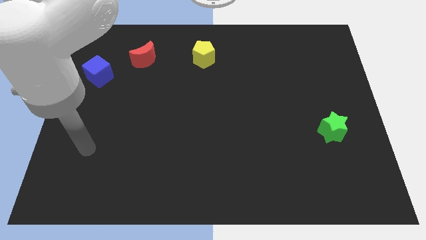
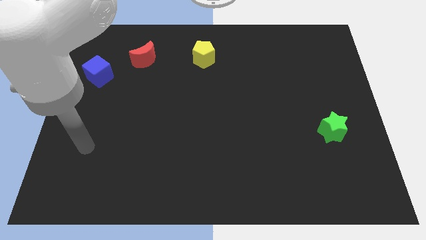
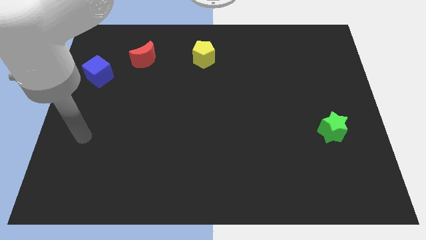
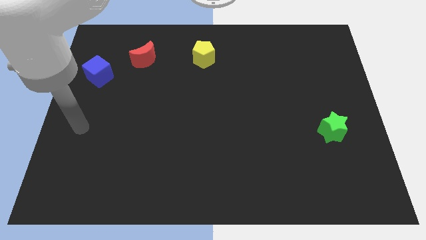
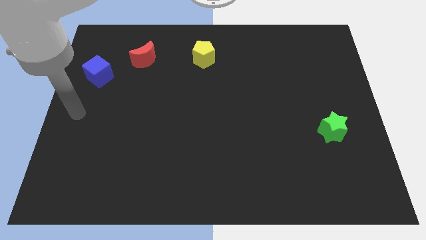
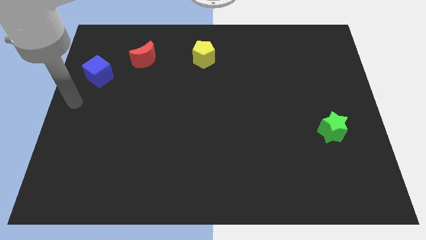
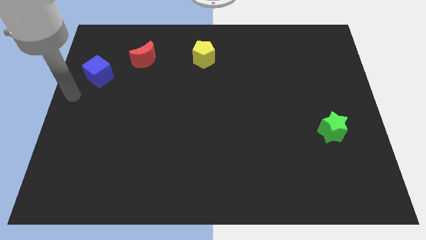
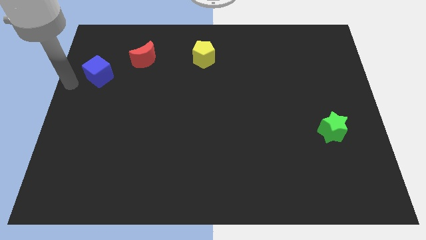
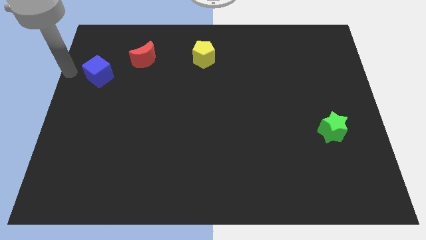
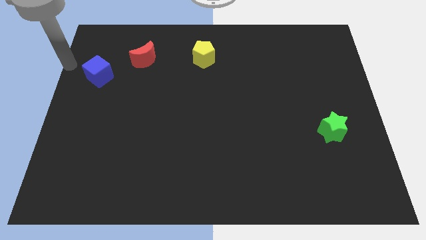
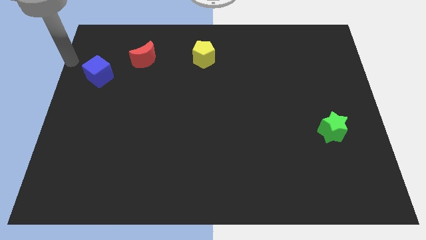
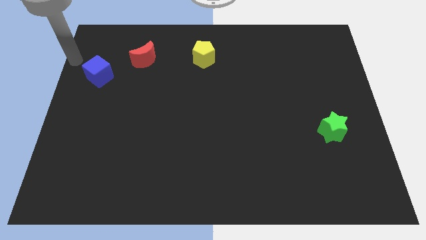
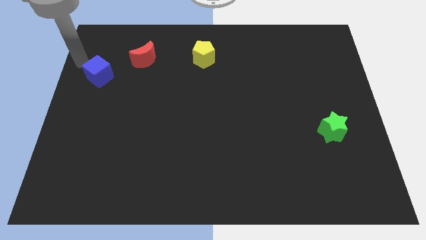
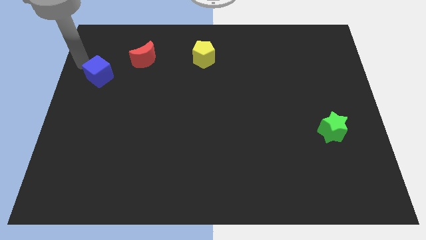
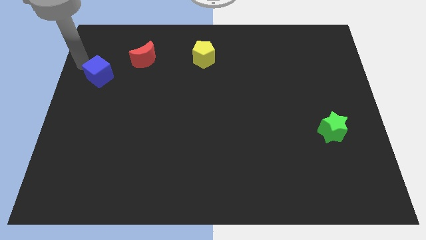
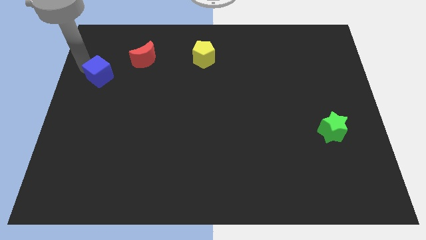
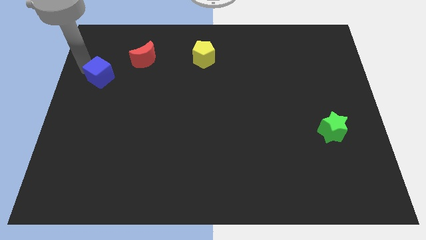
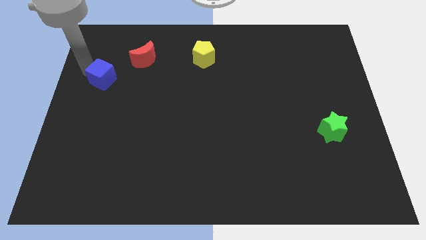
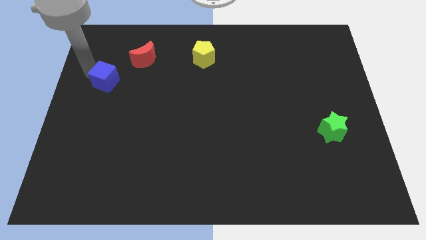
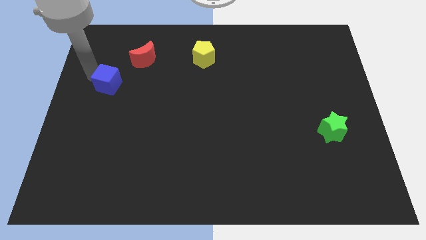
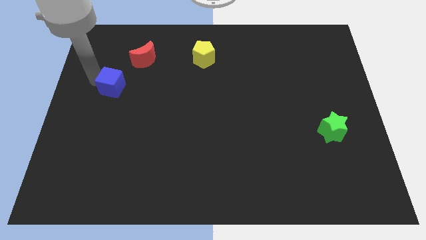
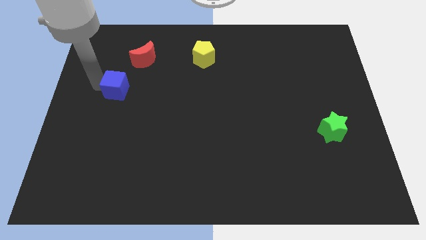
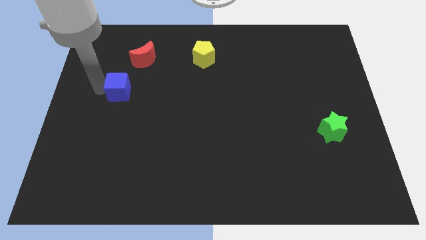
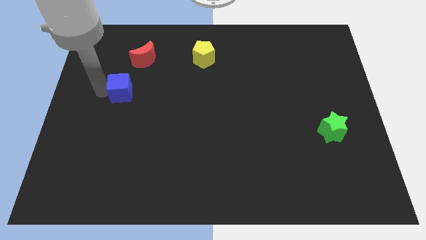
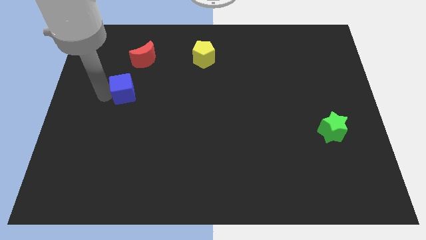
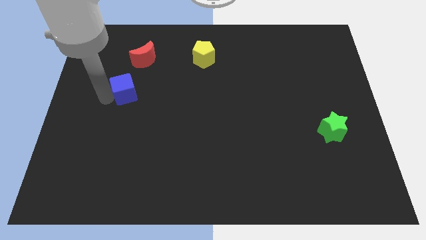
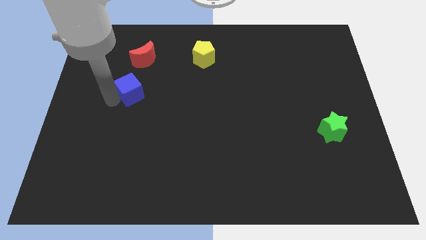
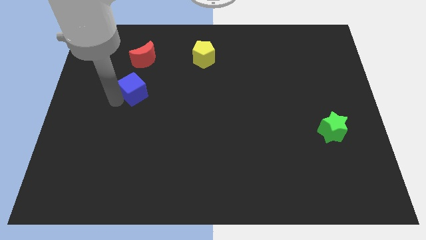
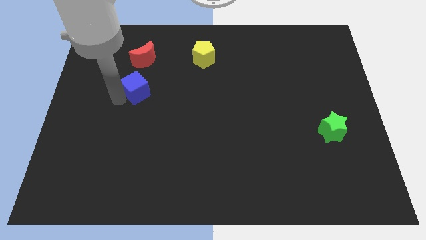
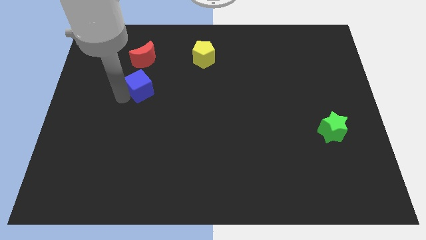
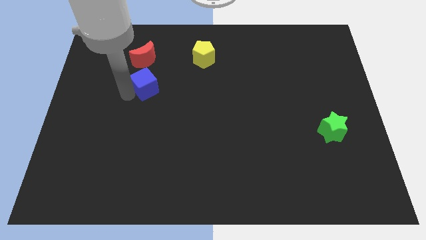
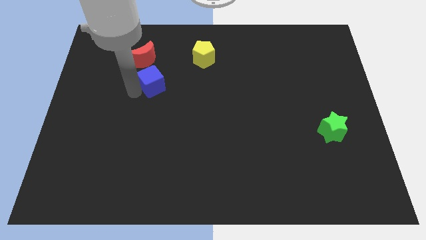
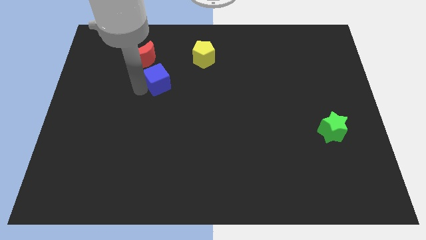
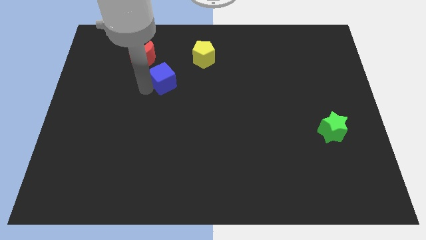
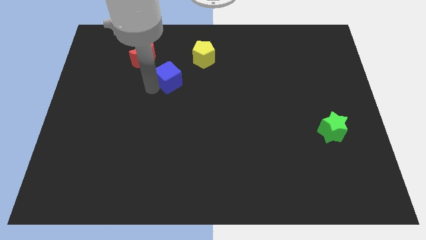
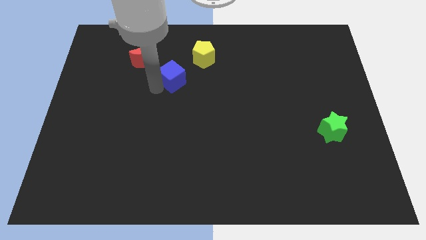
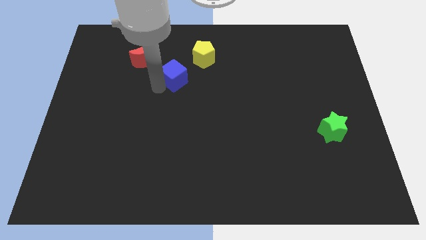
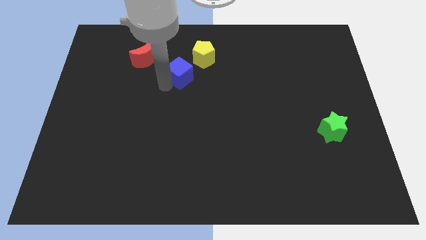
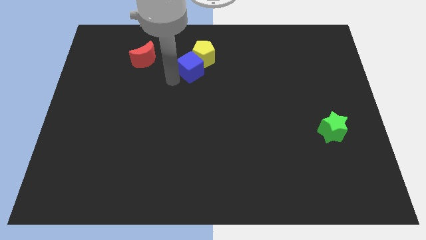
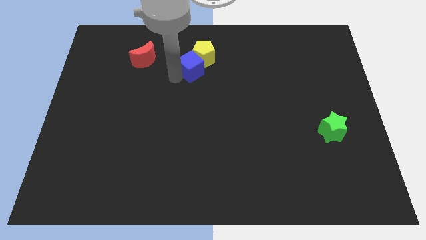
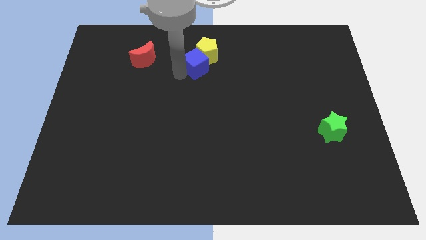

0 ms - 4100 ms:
push the blue block next to the pentagon

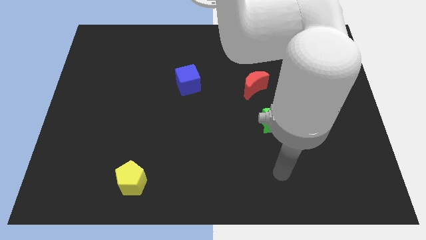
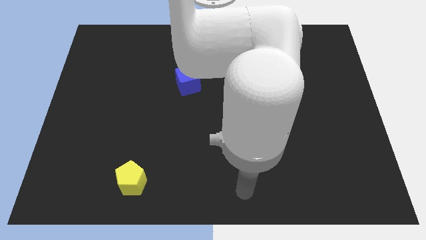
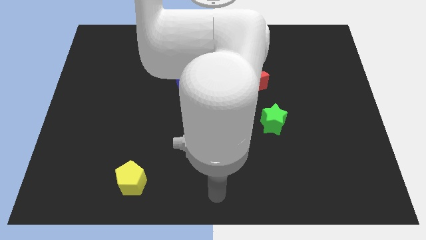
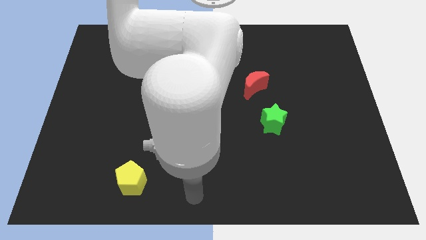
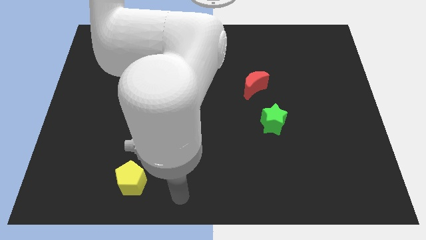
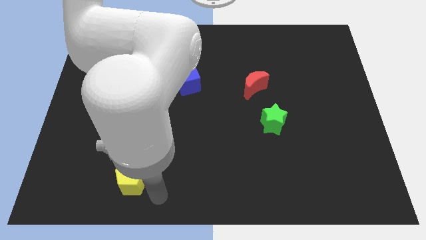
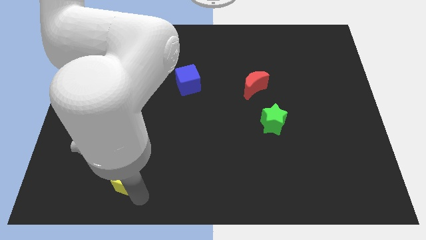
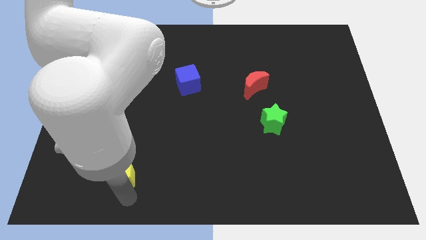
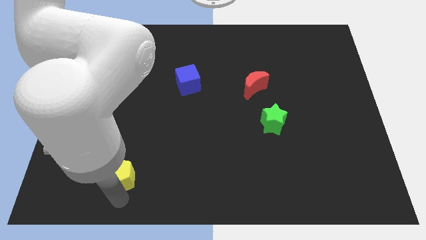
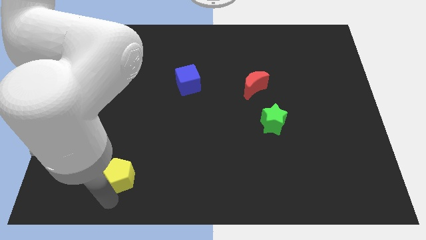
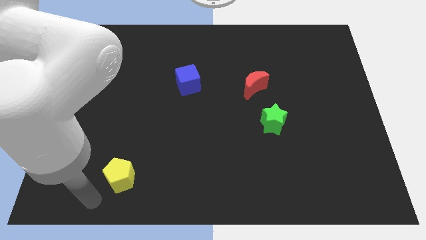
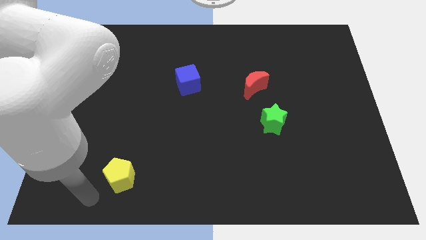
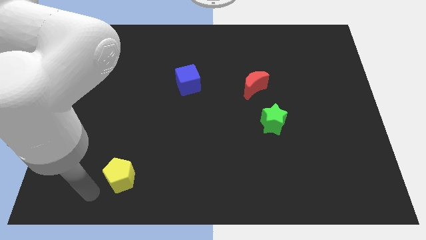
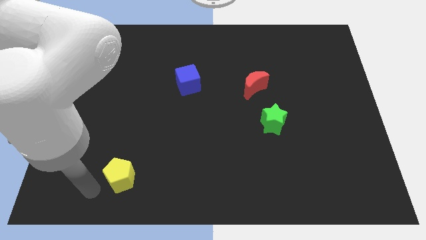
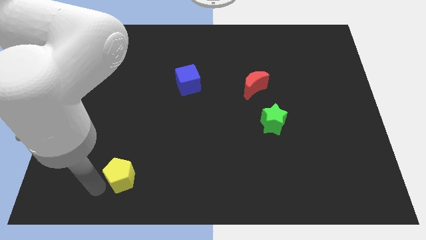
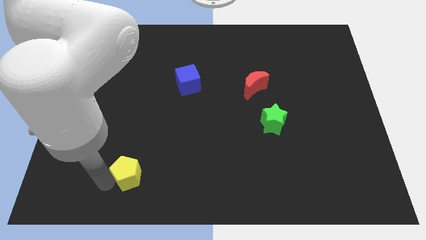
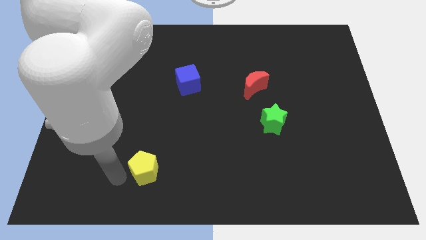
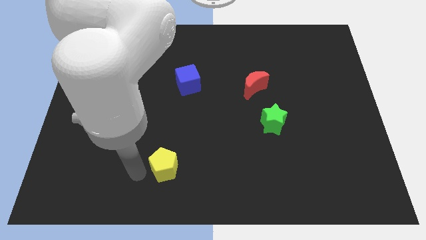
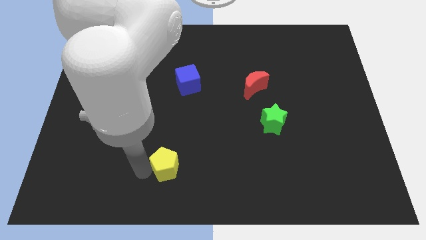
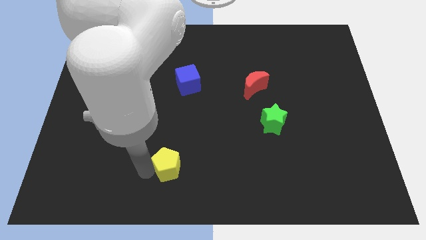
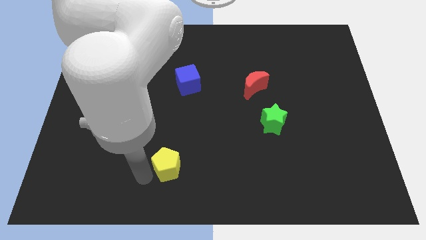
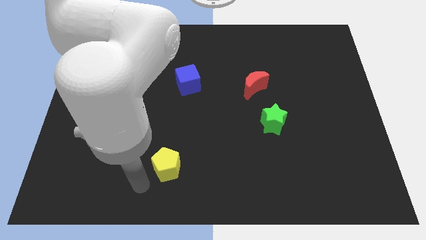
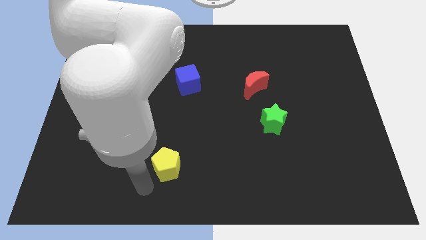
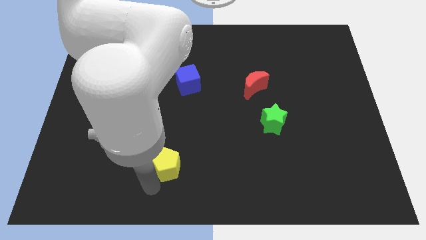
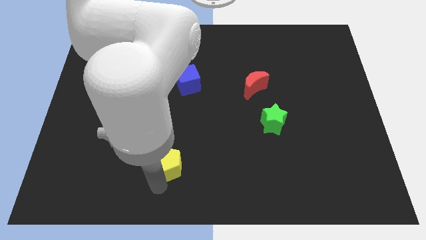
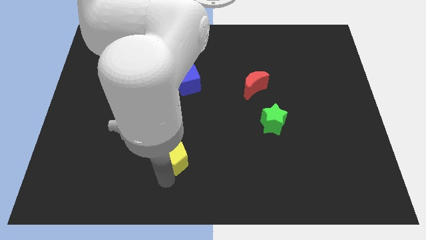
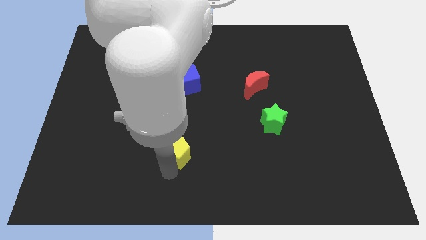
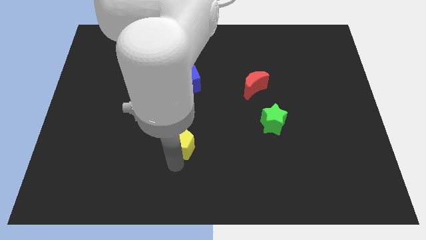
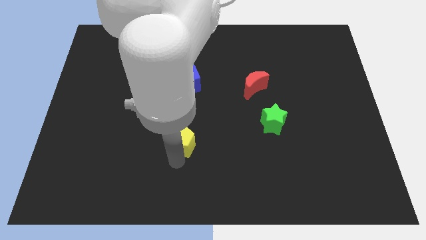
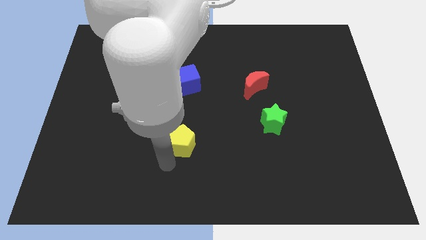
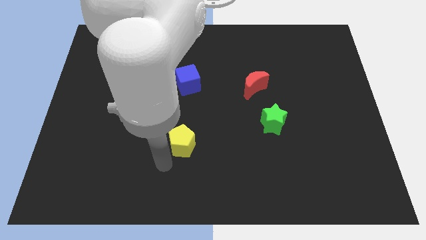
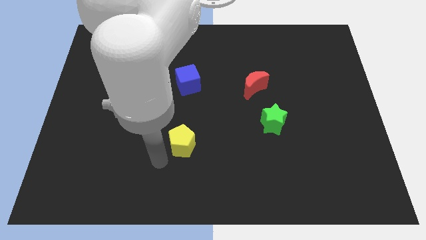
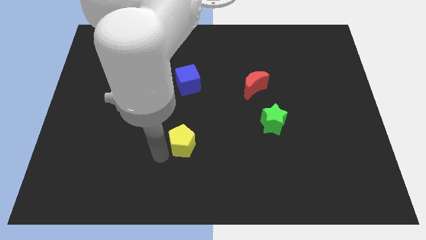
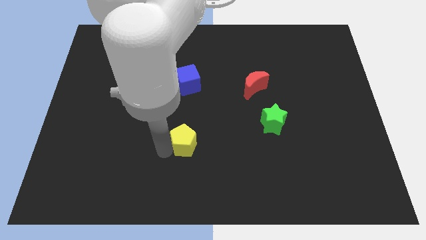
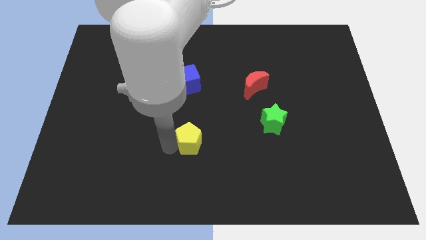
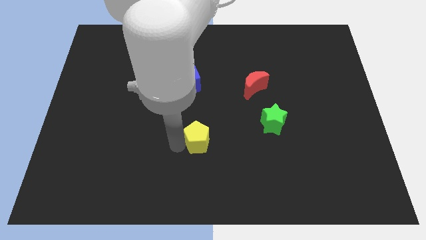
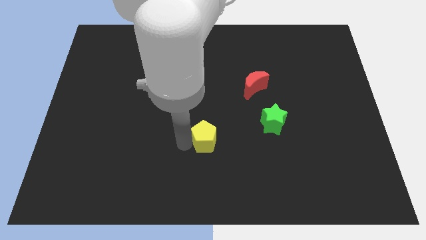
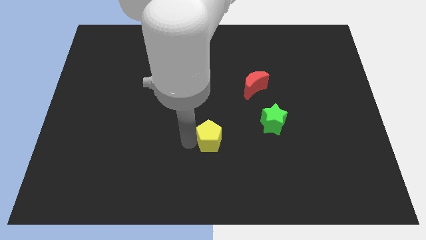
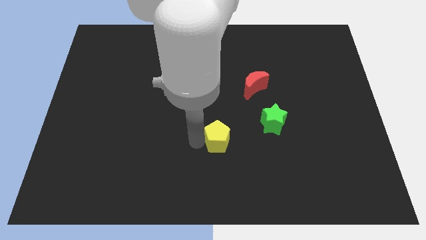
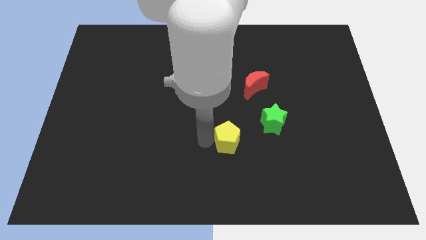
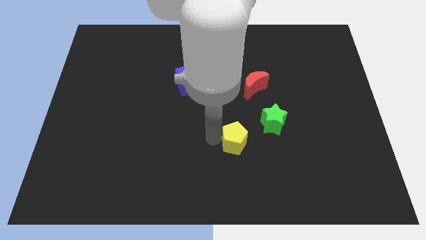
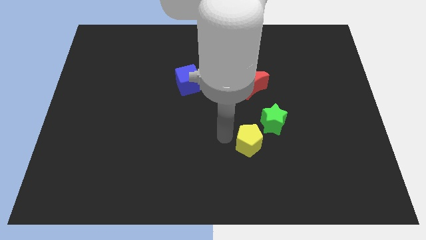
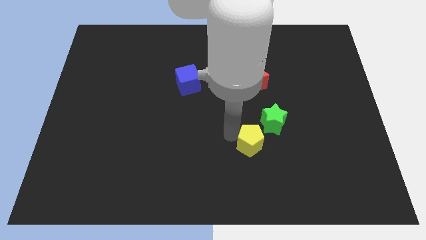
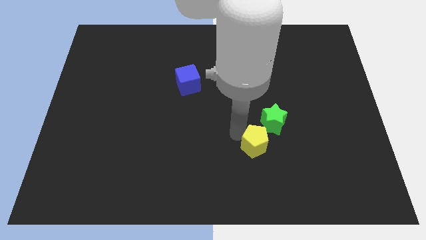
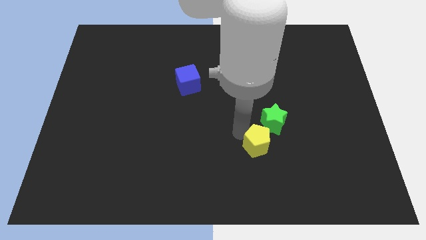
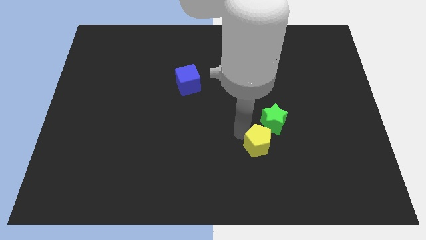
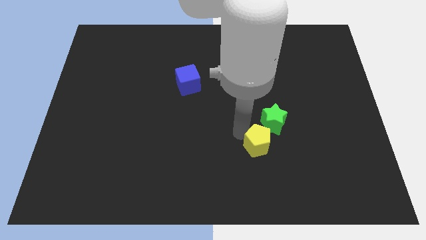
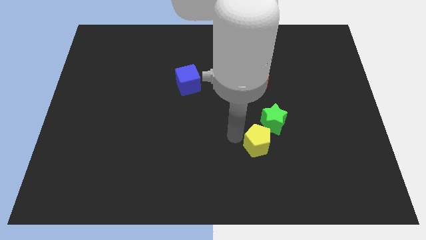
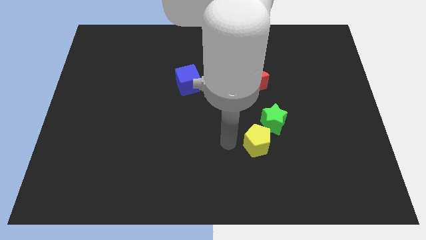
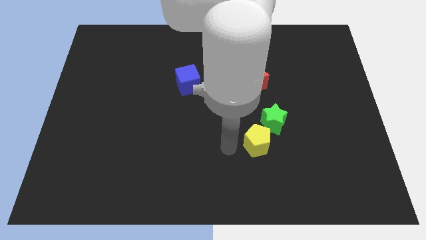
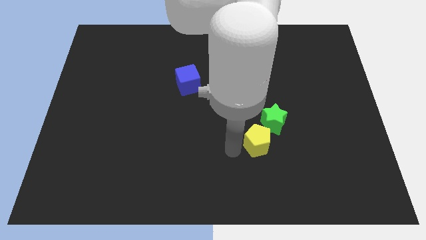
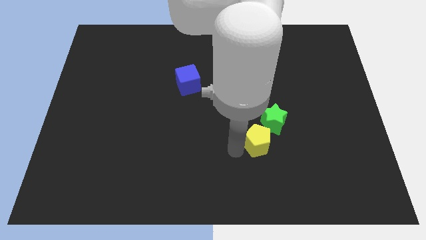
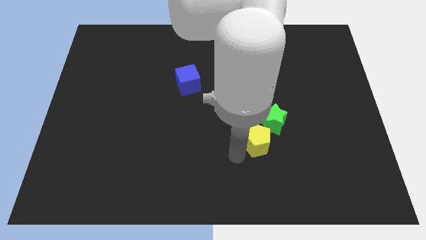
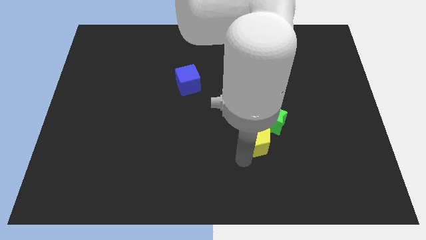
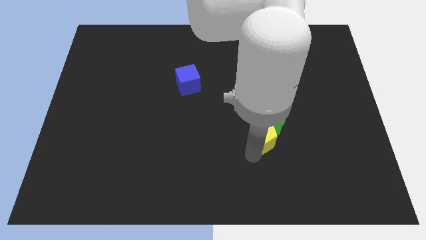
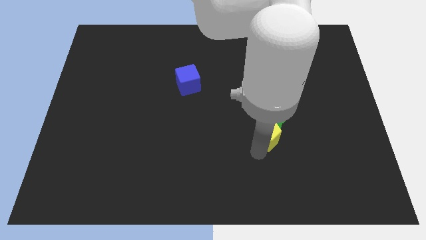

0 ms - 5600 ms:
push the yellow block close to the star
